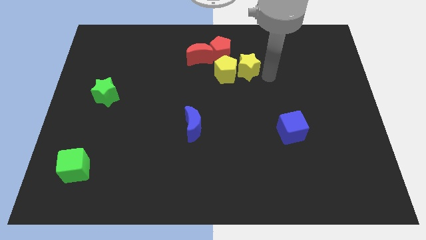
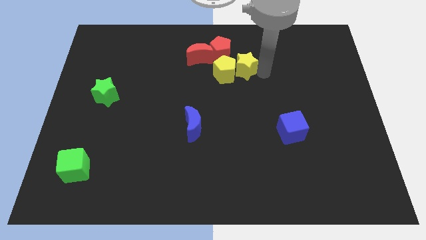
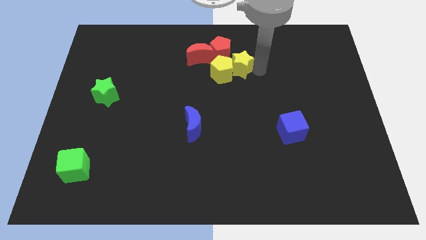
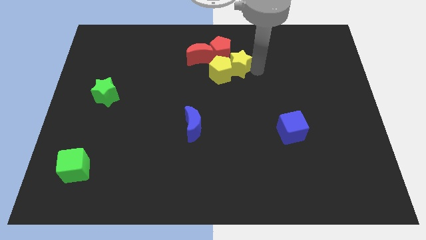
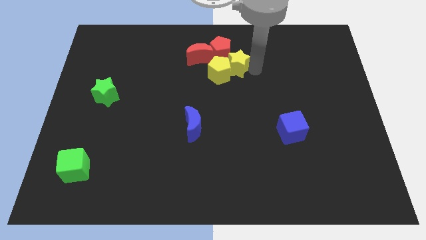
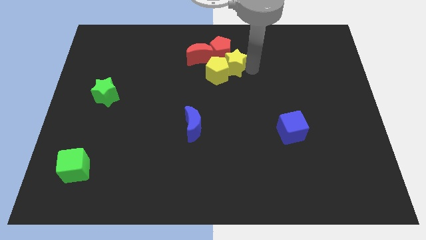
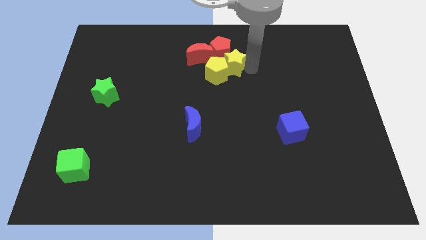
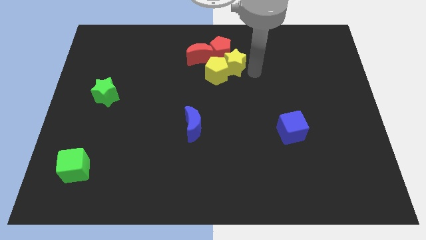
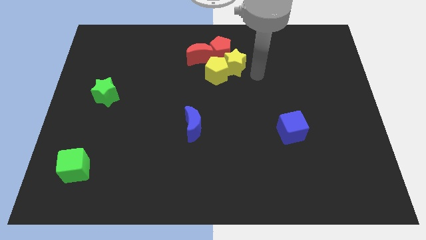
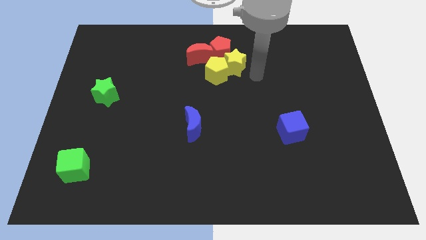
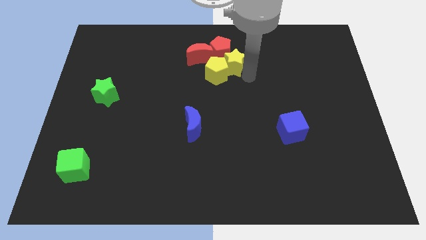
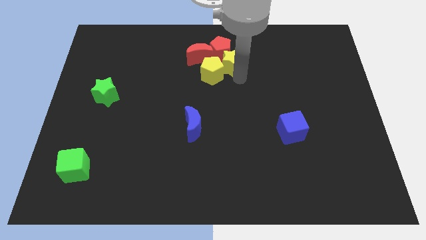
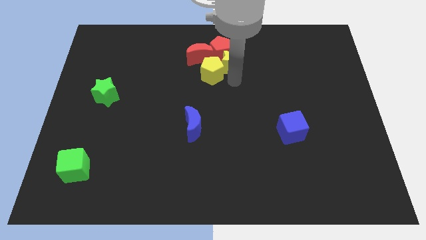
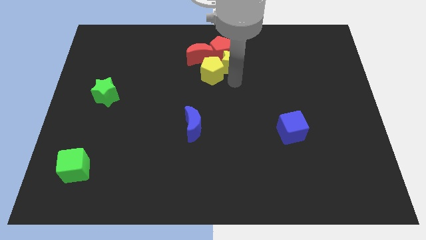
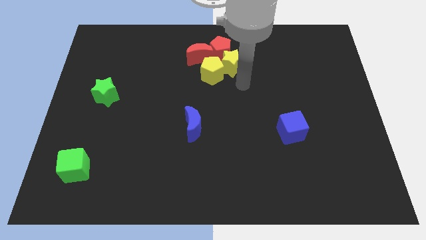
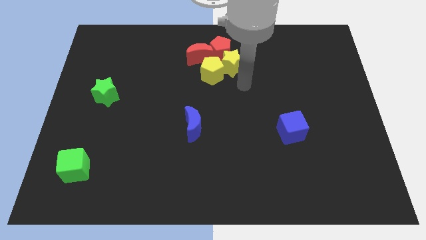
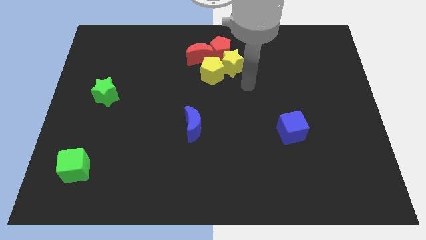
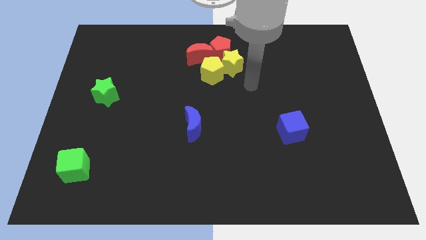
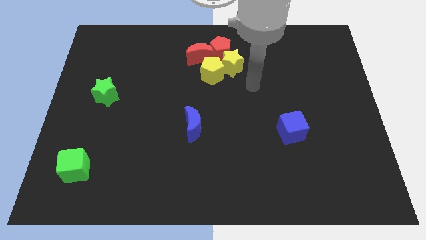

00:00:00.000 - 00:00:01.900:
push the yellow pentagon with a yellow star to the bottom of the red pentagon

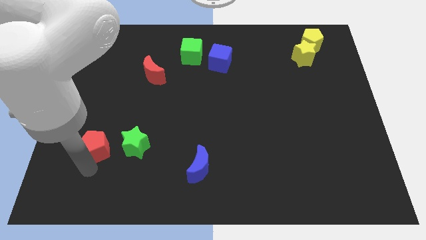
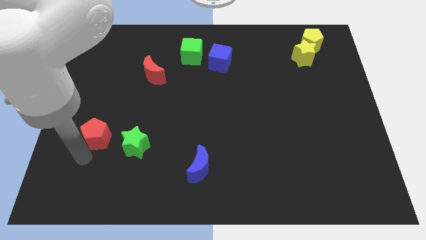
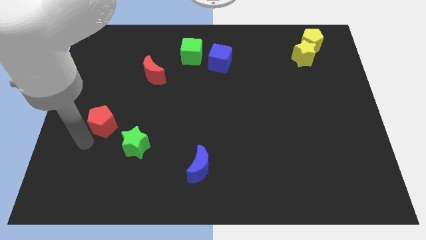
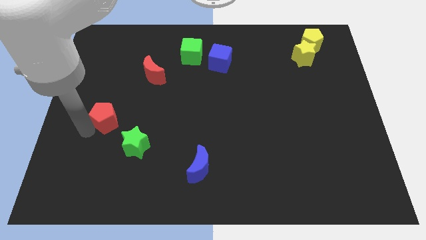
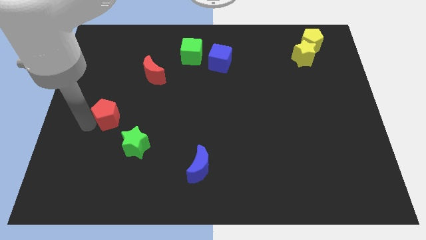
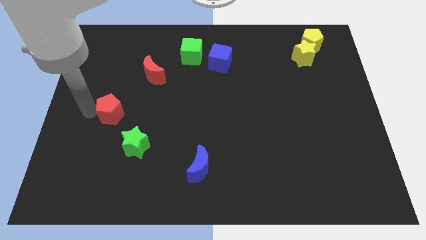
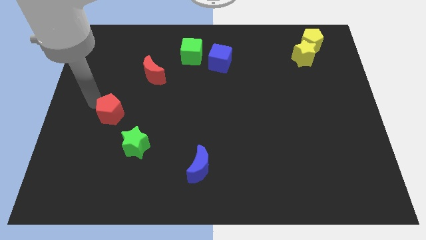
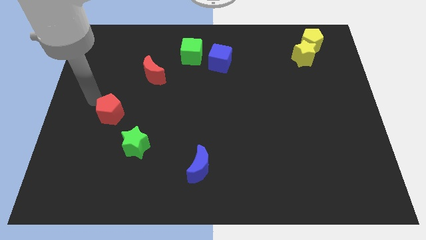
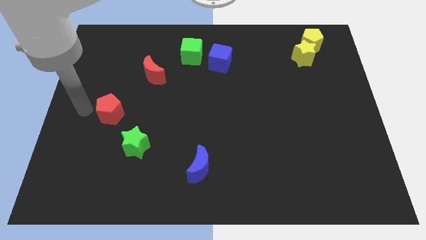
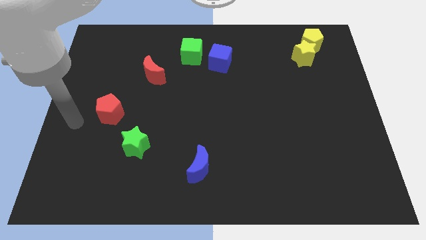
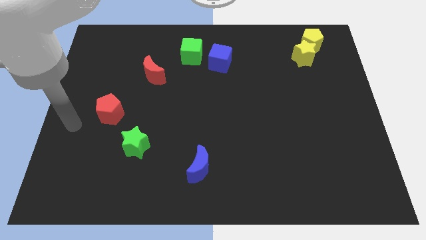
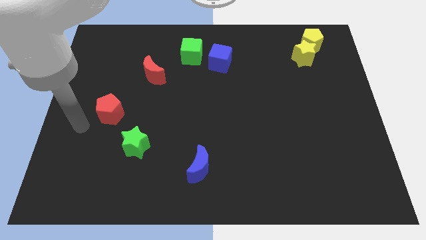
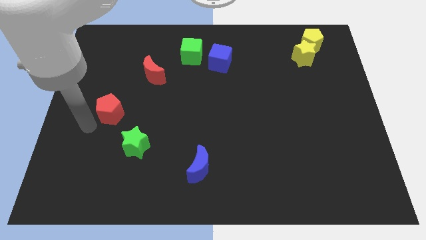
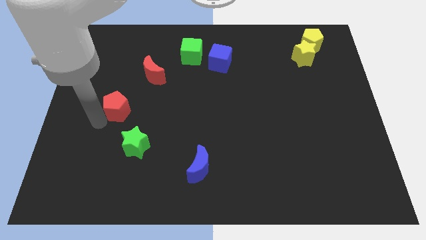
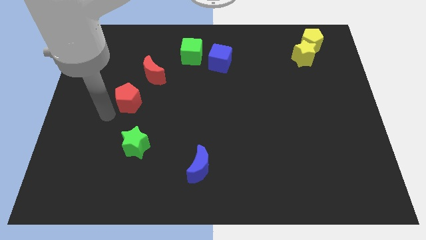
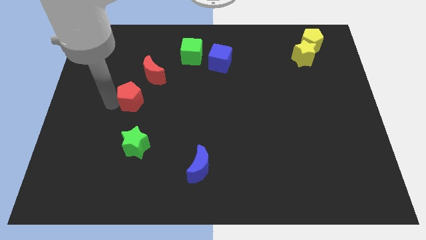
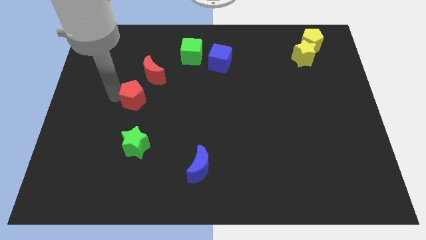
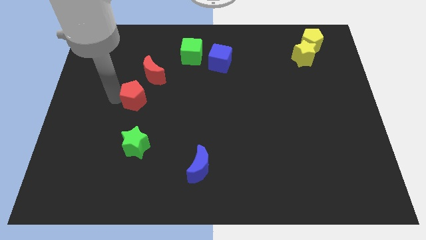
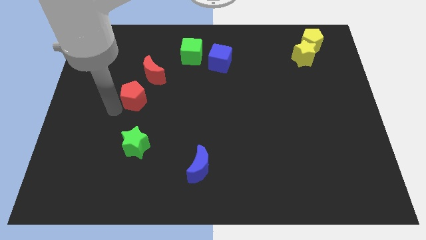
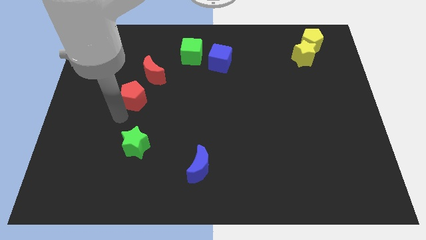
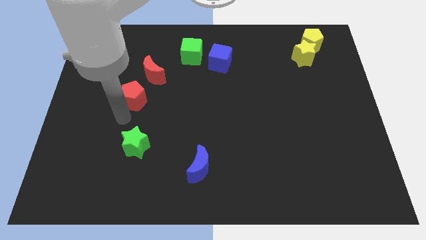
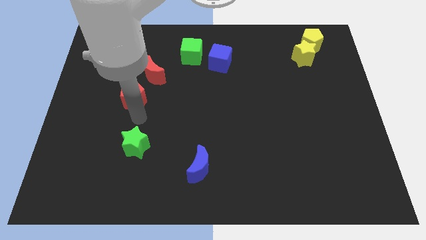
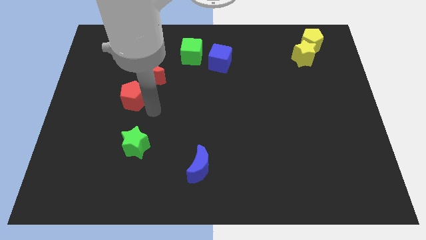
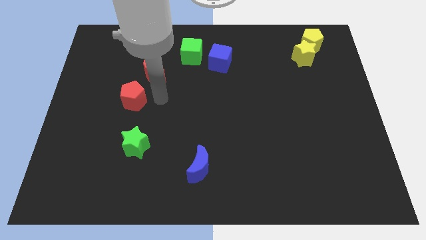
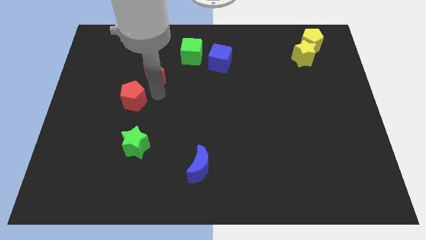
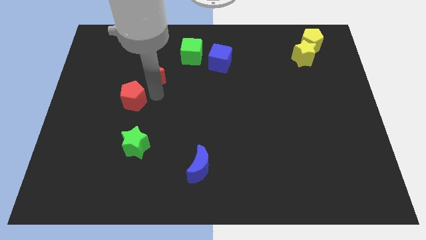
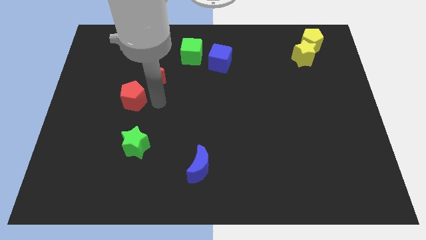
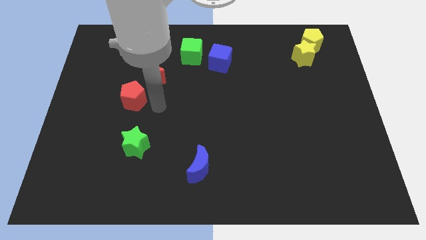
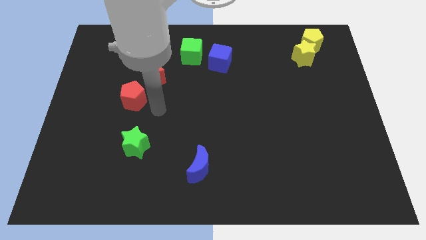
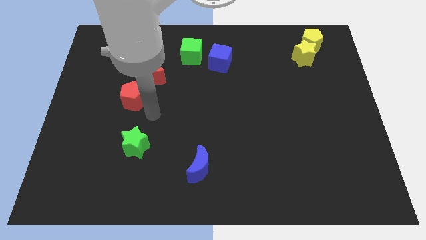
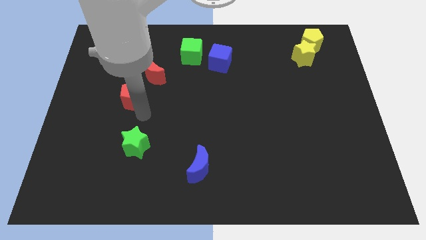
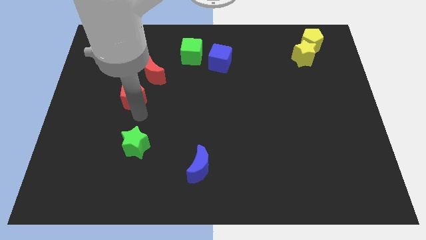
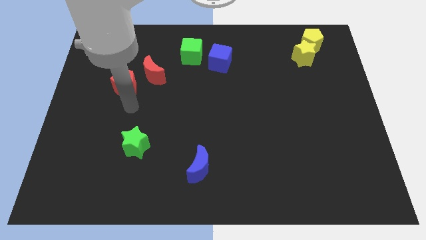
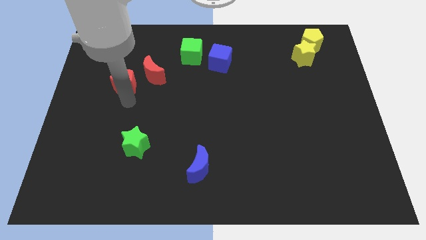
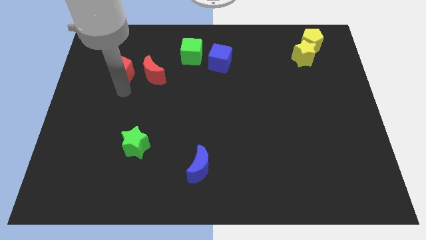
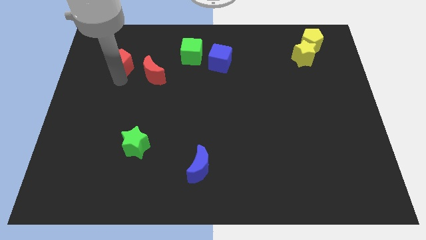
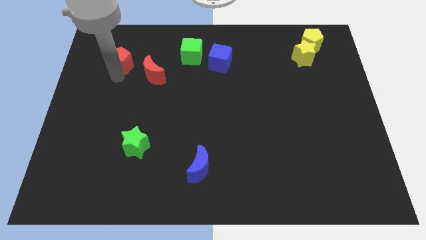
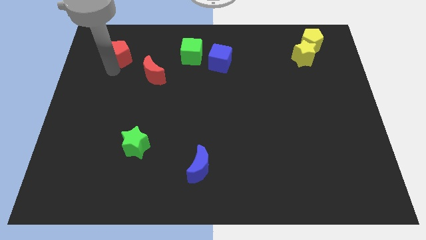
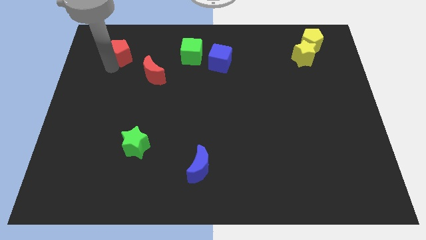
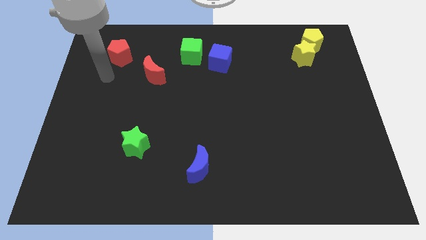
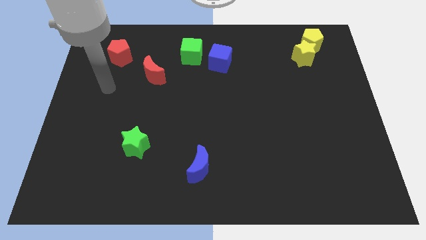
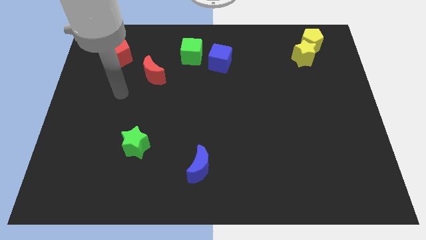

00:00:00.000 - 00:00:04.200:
place the red pentagon left to the red crescent

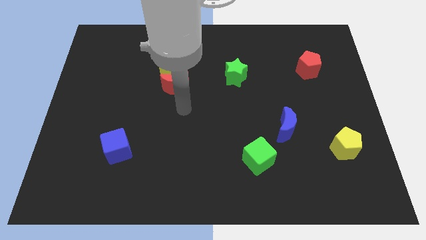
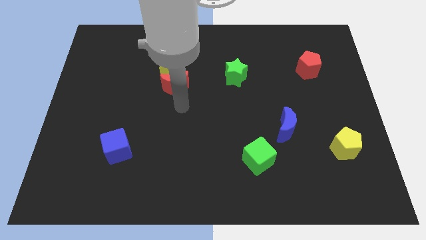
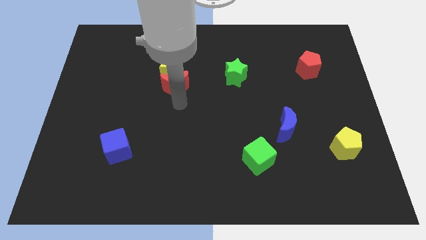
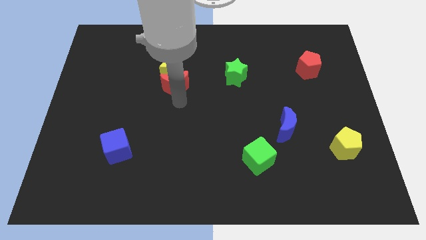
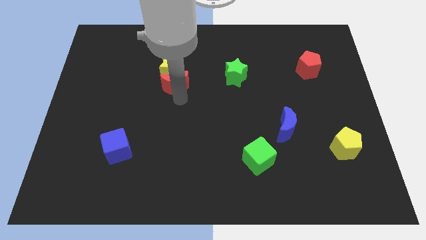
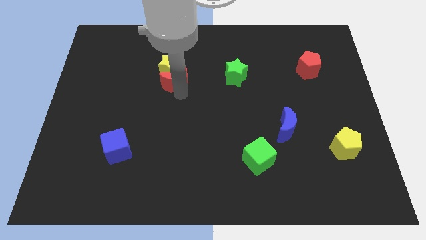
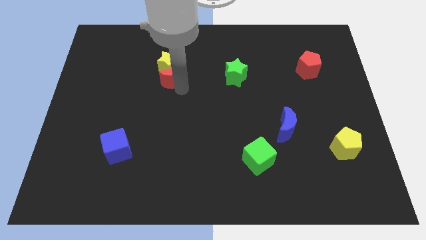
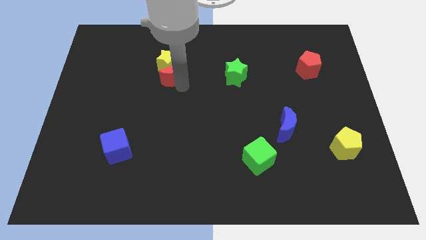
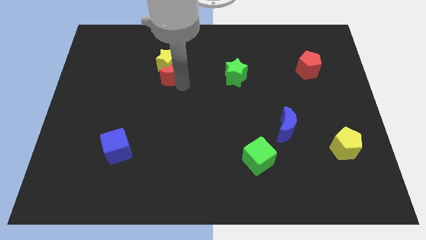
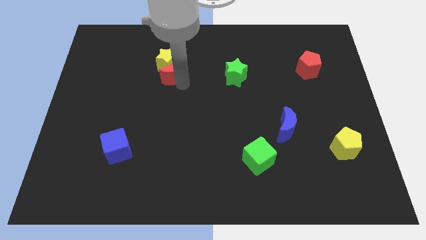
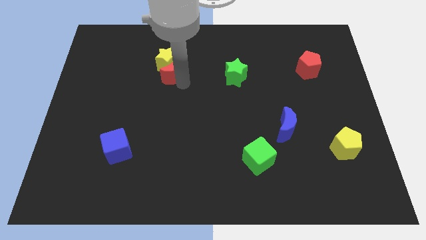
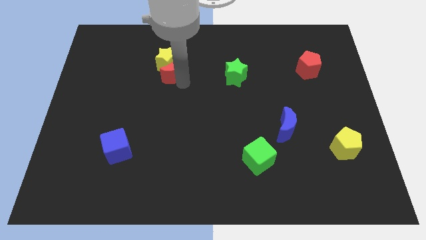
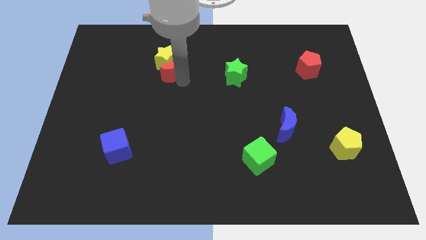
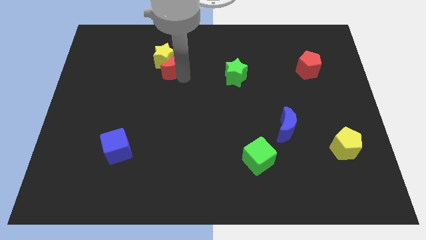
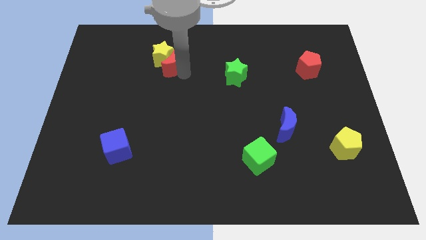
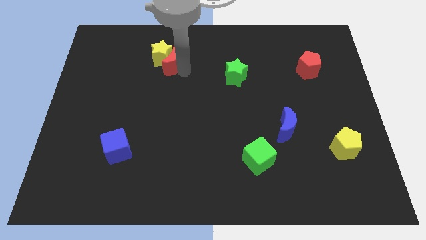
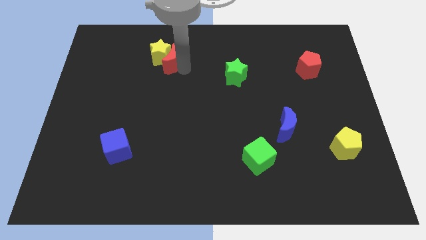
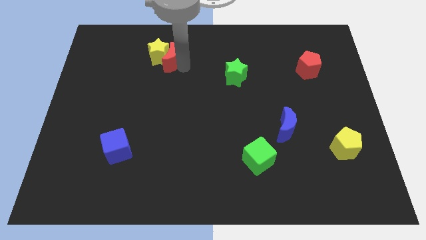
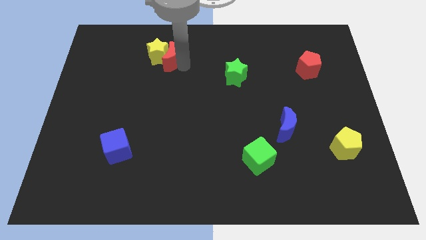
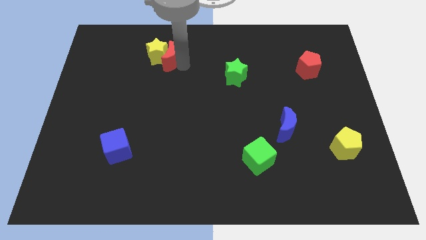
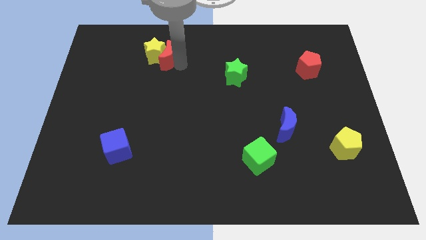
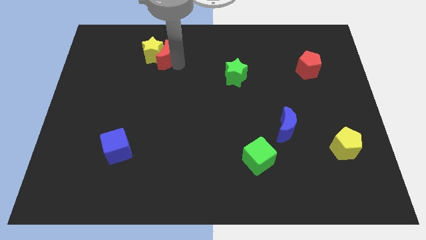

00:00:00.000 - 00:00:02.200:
push yellow star and red crescent

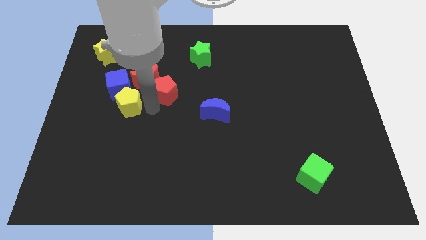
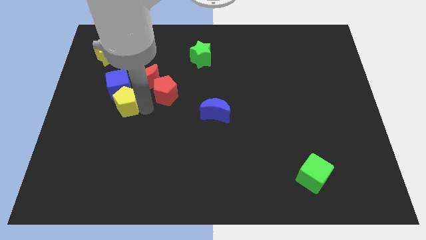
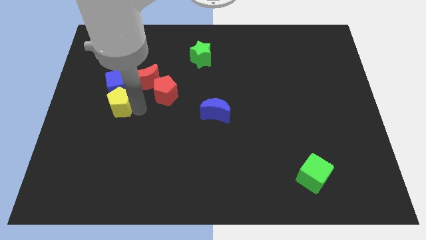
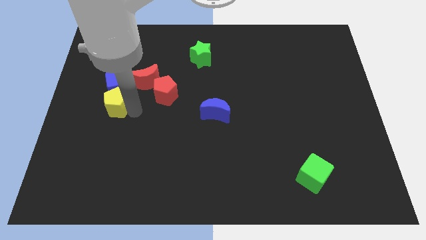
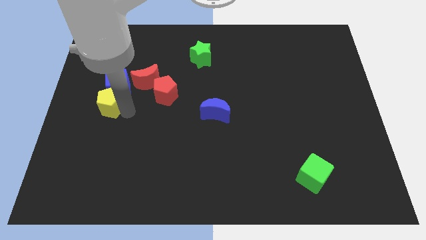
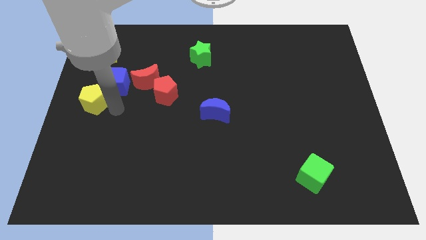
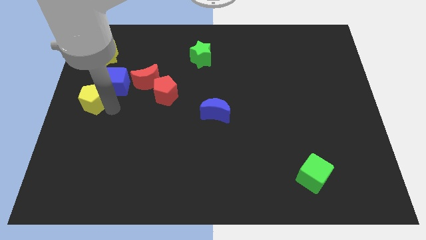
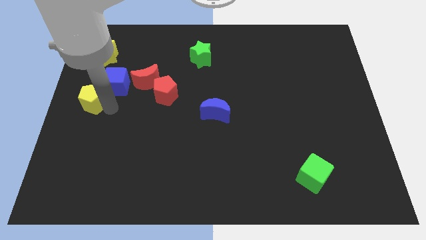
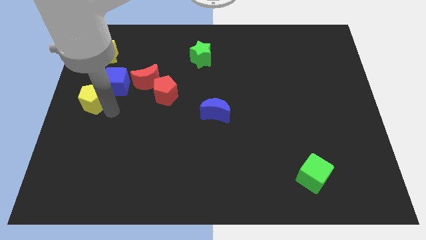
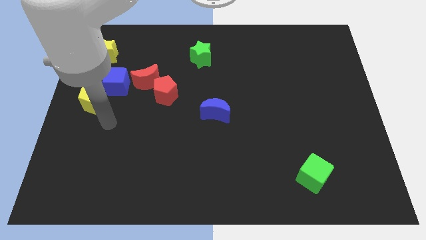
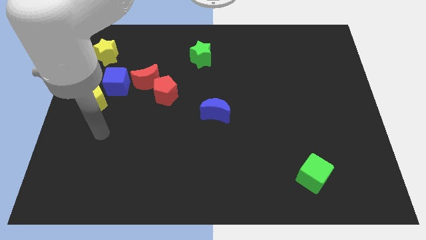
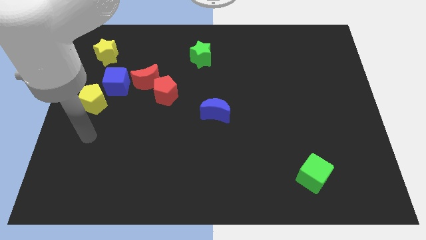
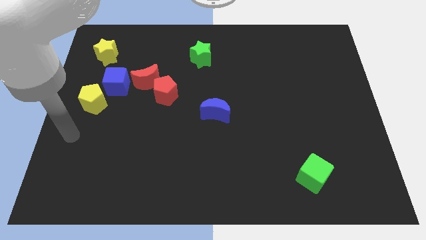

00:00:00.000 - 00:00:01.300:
move the yellow pentagon towards the left
